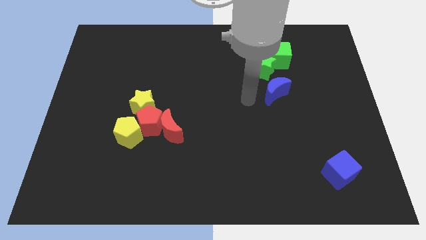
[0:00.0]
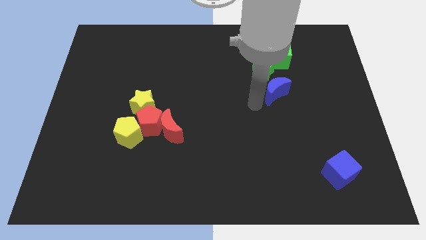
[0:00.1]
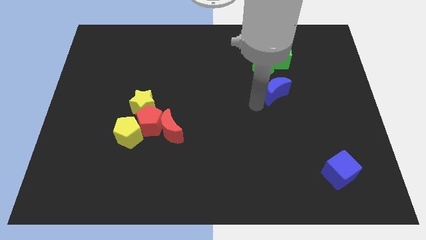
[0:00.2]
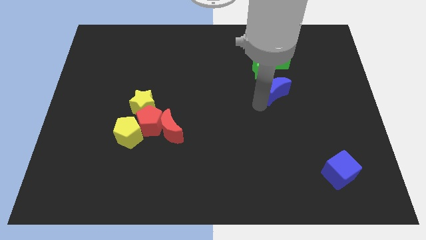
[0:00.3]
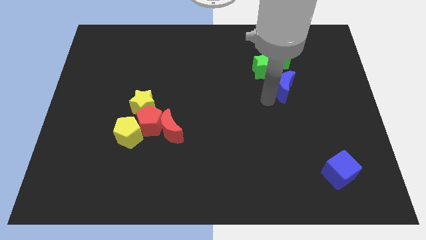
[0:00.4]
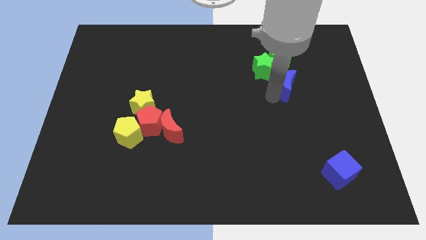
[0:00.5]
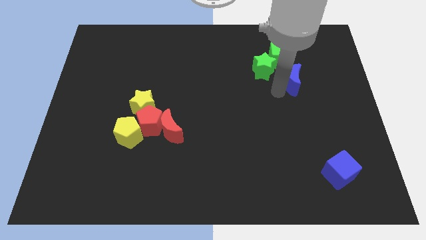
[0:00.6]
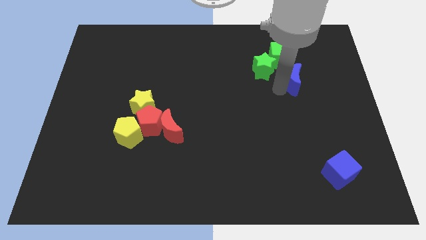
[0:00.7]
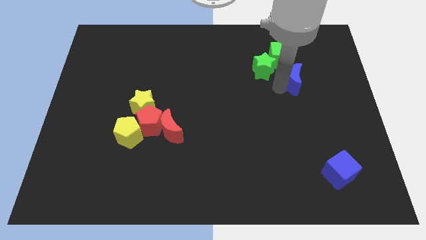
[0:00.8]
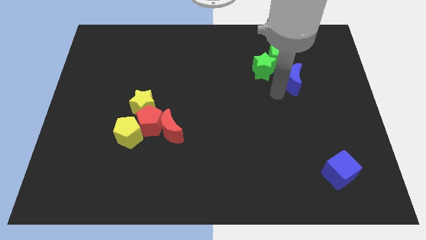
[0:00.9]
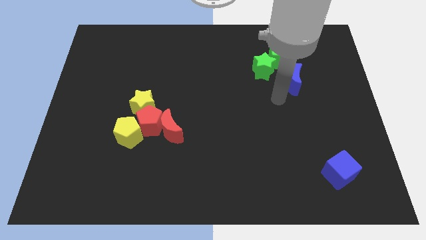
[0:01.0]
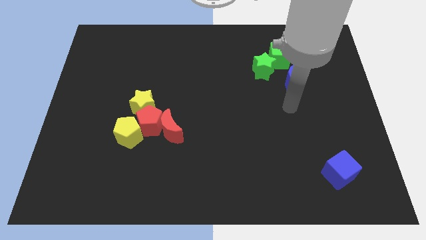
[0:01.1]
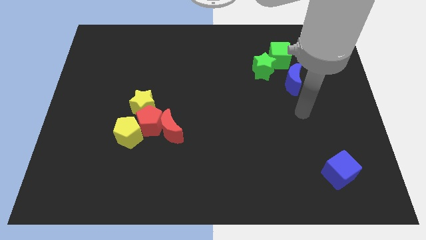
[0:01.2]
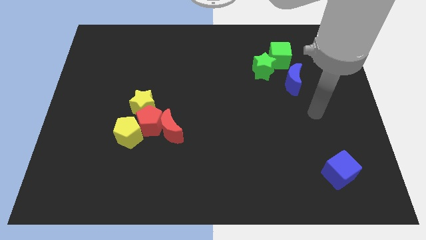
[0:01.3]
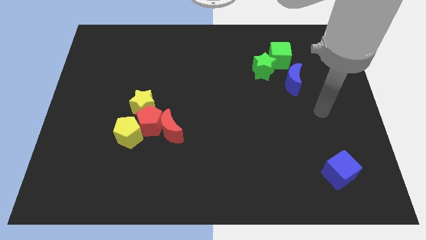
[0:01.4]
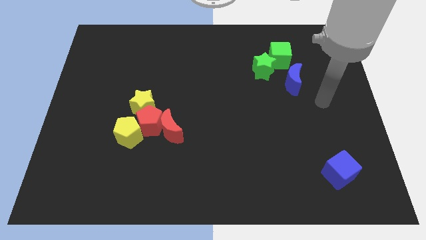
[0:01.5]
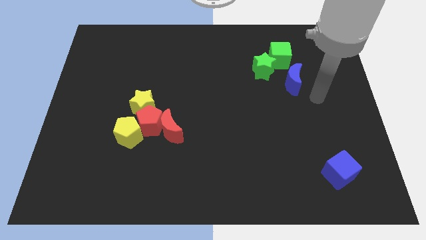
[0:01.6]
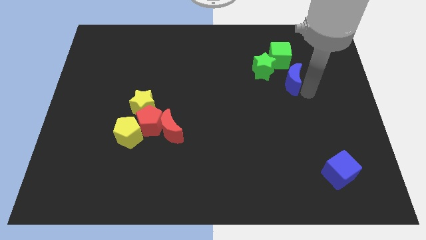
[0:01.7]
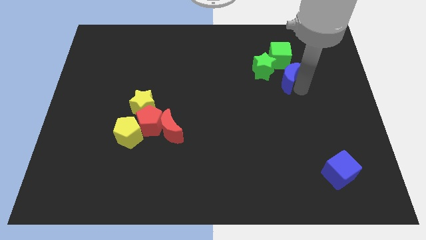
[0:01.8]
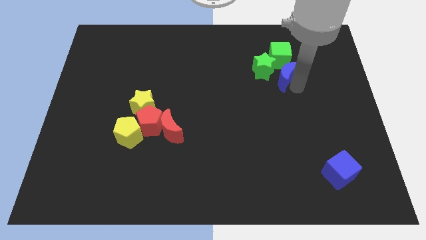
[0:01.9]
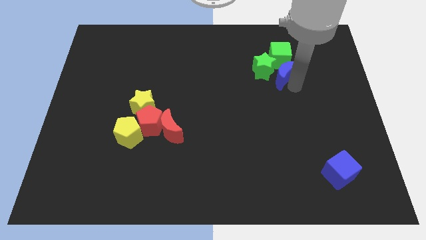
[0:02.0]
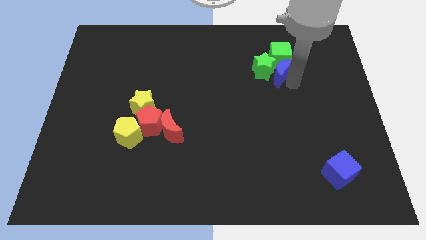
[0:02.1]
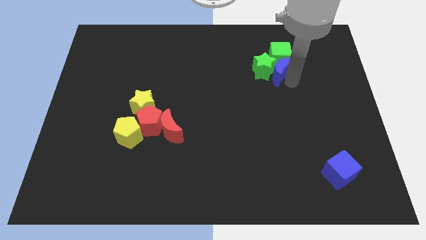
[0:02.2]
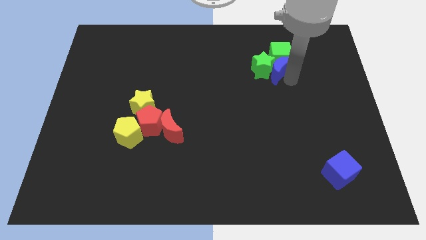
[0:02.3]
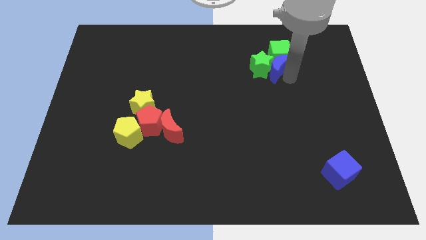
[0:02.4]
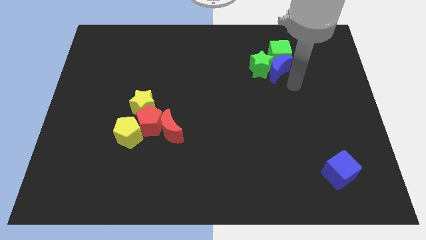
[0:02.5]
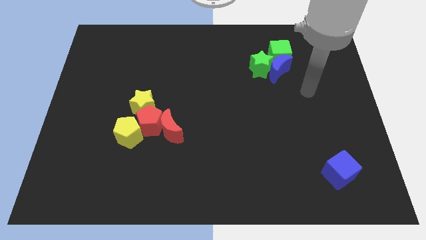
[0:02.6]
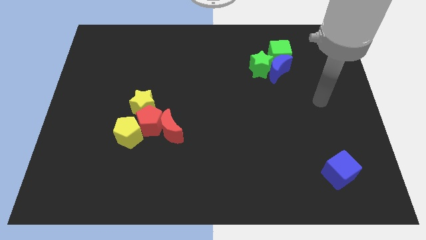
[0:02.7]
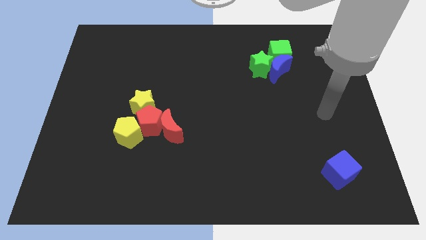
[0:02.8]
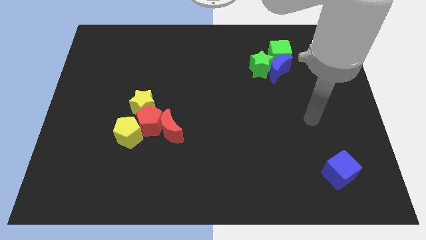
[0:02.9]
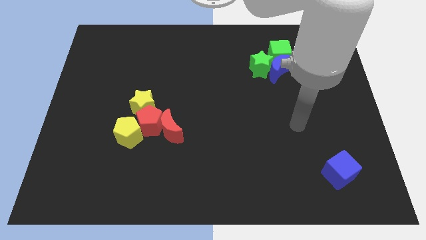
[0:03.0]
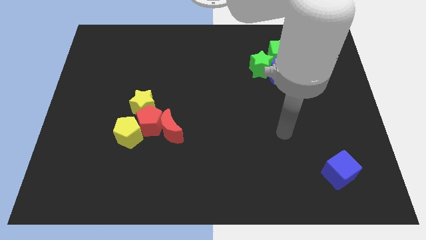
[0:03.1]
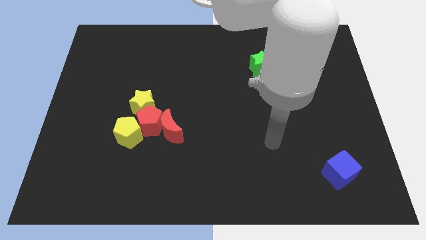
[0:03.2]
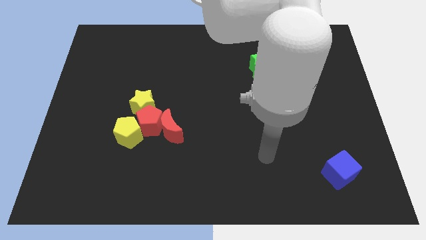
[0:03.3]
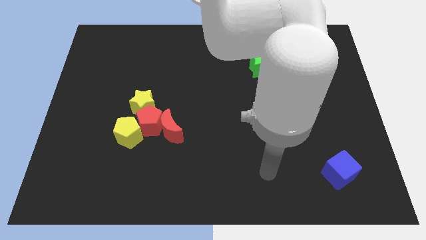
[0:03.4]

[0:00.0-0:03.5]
push the blue crescent towards the green blocks

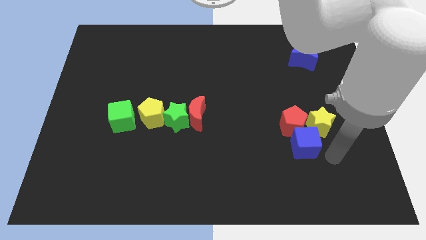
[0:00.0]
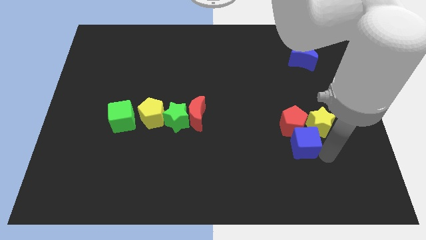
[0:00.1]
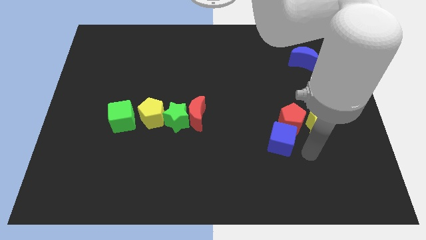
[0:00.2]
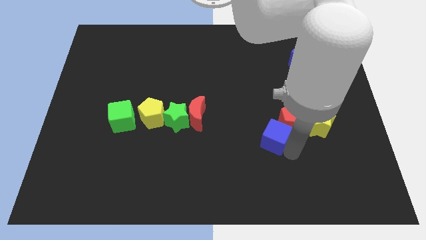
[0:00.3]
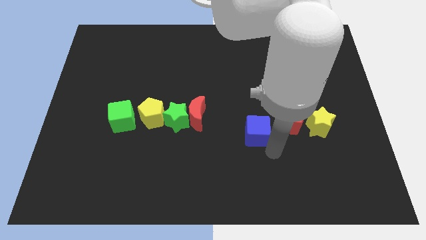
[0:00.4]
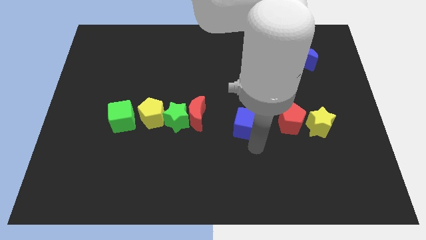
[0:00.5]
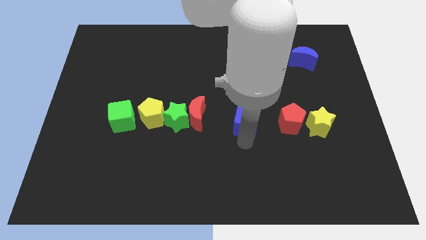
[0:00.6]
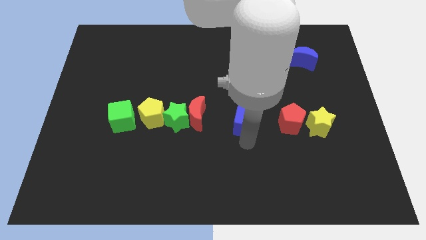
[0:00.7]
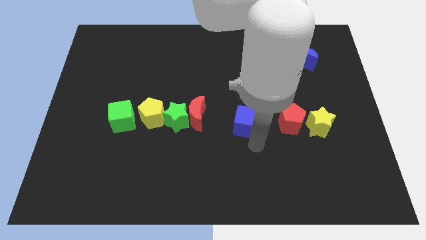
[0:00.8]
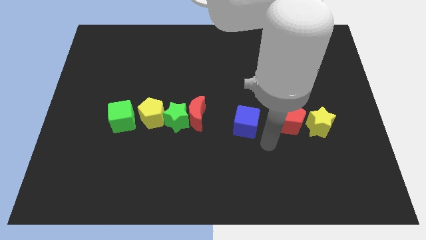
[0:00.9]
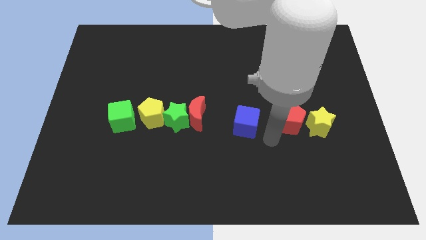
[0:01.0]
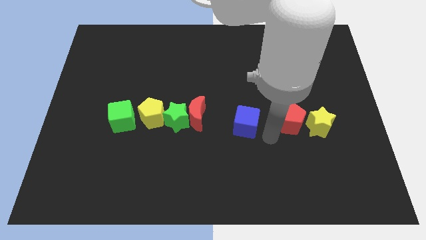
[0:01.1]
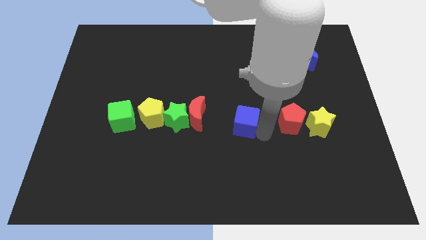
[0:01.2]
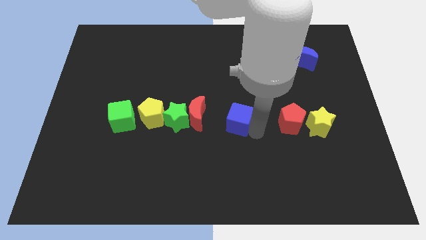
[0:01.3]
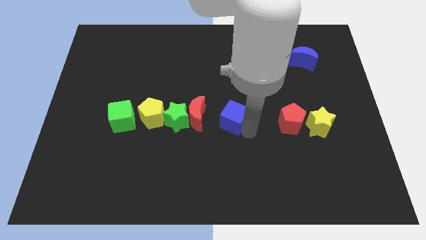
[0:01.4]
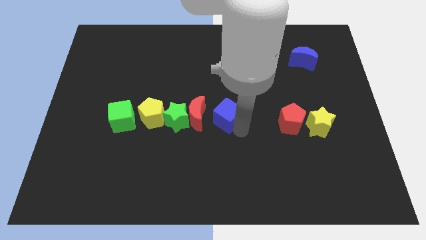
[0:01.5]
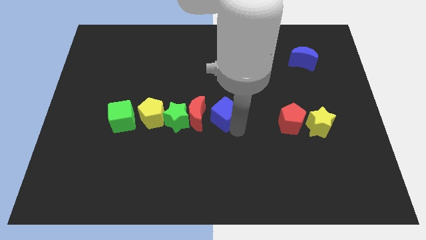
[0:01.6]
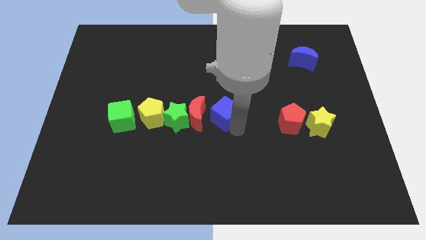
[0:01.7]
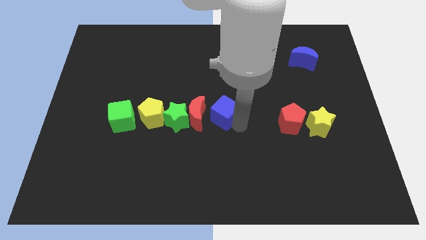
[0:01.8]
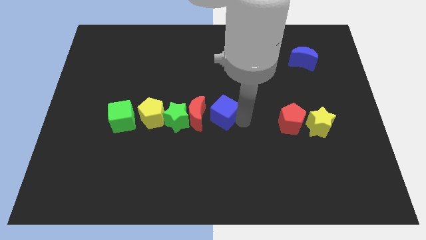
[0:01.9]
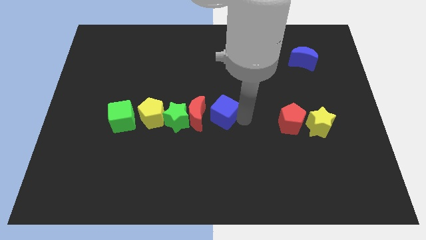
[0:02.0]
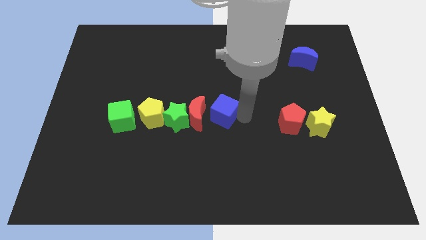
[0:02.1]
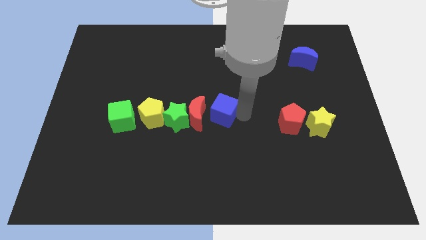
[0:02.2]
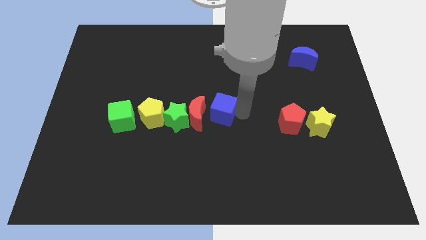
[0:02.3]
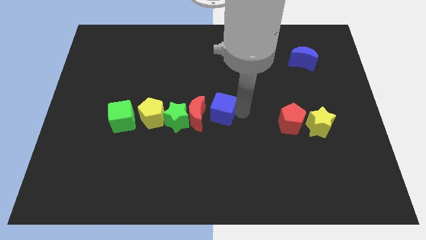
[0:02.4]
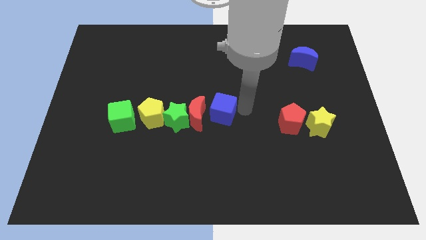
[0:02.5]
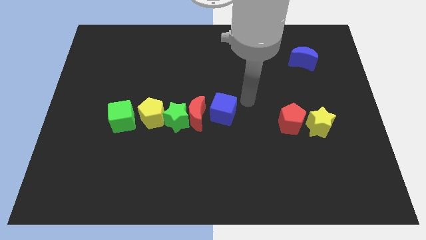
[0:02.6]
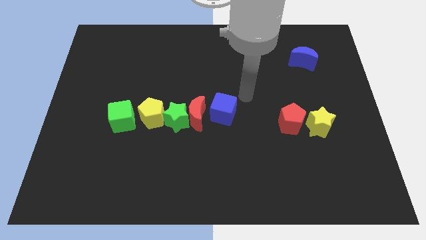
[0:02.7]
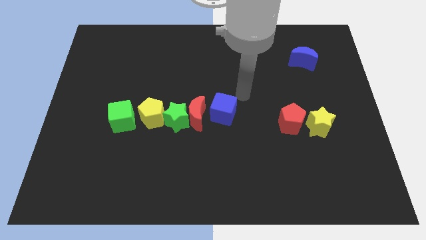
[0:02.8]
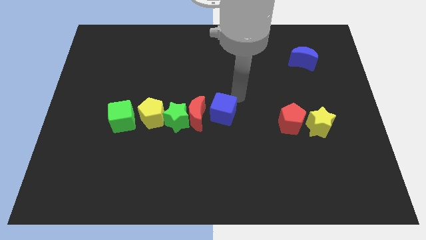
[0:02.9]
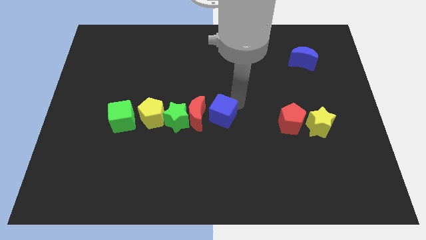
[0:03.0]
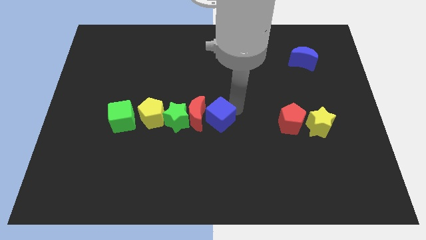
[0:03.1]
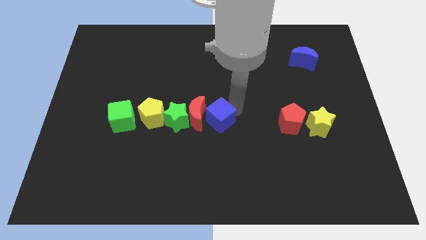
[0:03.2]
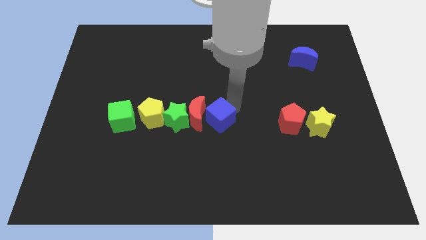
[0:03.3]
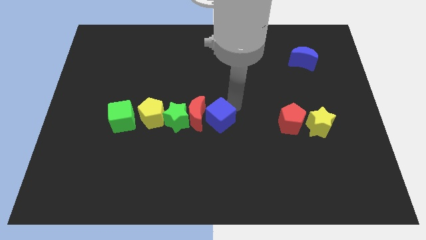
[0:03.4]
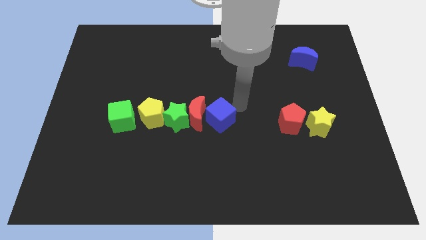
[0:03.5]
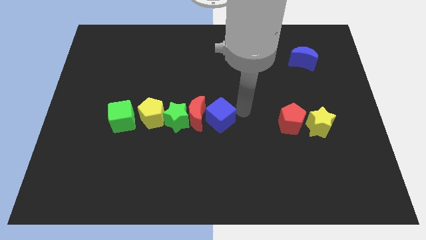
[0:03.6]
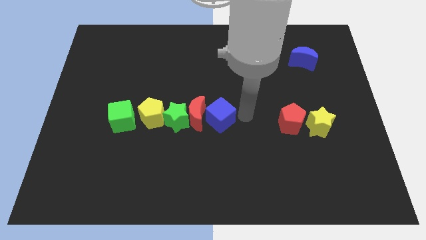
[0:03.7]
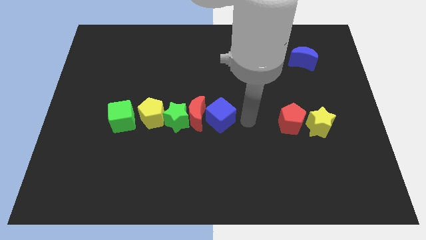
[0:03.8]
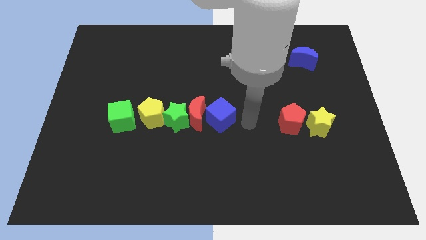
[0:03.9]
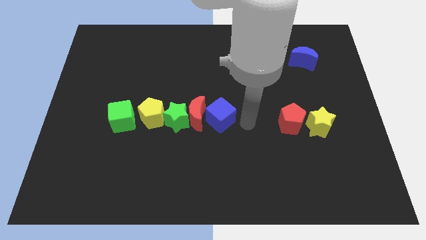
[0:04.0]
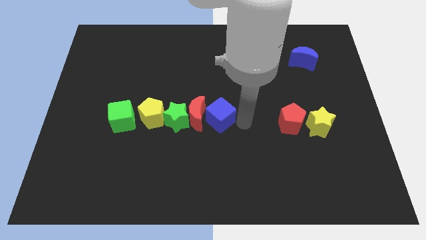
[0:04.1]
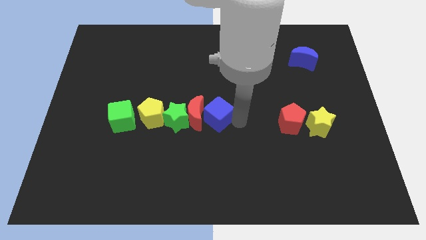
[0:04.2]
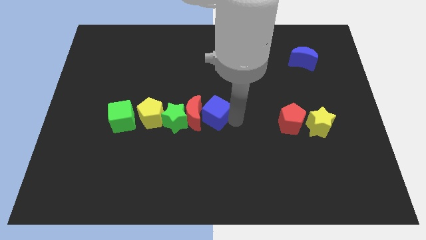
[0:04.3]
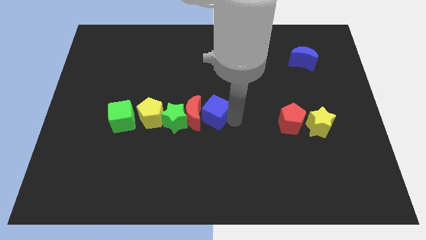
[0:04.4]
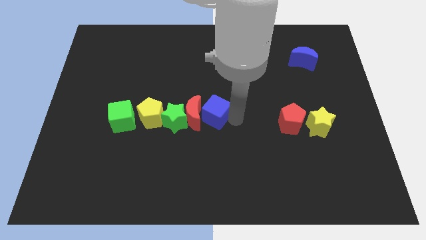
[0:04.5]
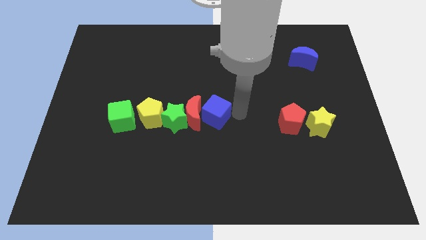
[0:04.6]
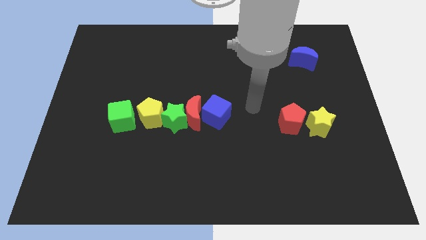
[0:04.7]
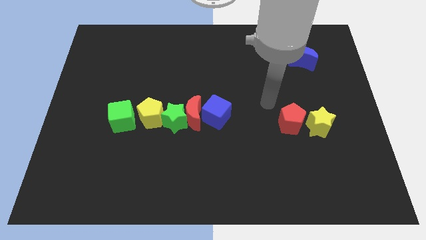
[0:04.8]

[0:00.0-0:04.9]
place the blue cube into the right of red crescent

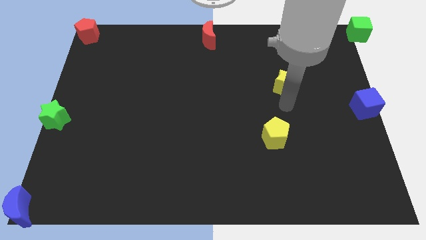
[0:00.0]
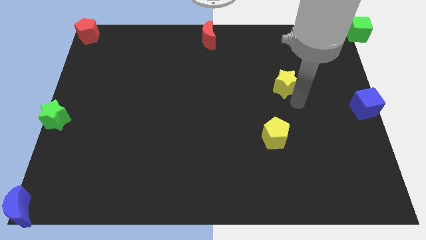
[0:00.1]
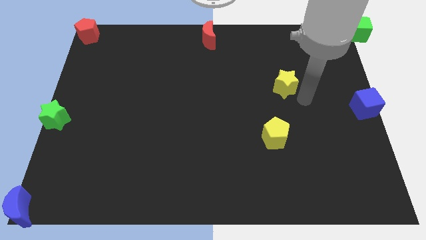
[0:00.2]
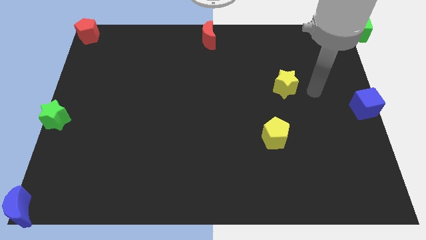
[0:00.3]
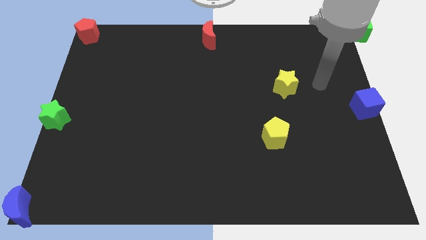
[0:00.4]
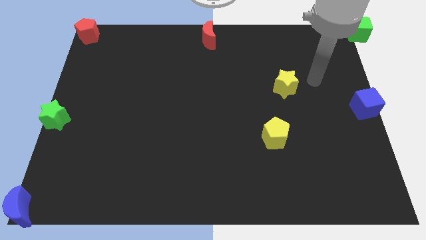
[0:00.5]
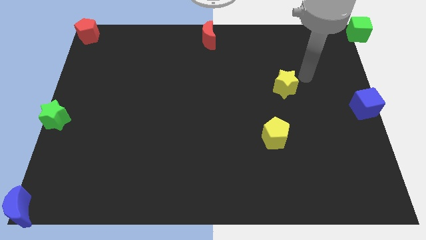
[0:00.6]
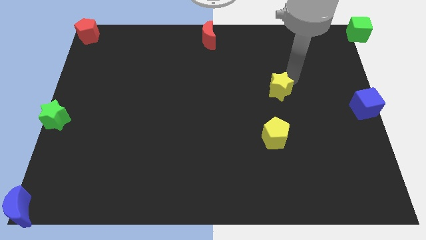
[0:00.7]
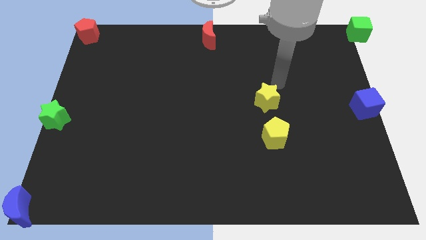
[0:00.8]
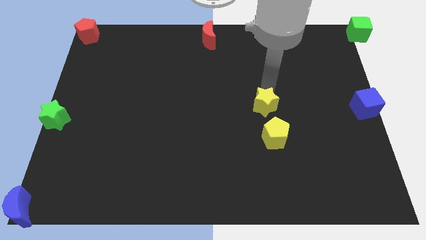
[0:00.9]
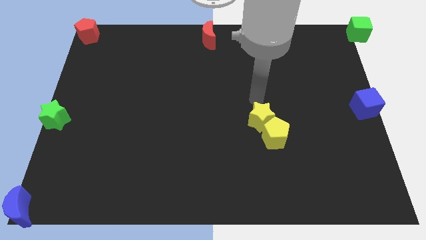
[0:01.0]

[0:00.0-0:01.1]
move the yellow star into the yellow pentagon
